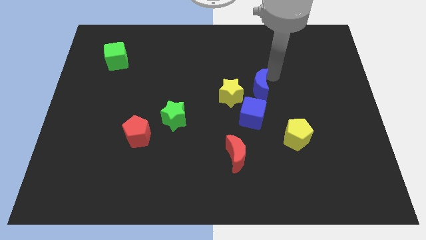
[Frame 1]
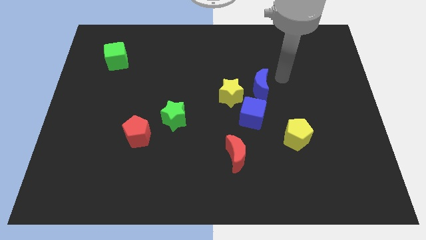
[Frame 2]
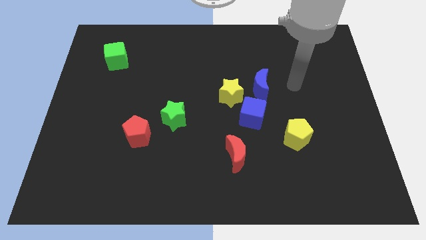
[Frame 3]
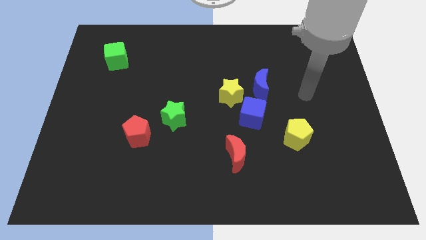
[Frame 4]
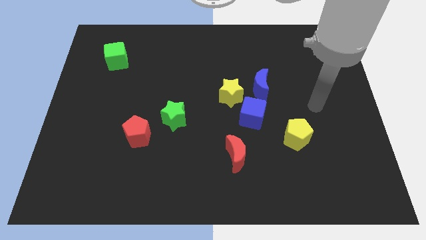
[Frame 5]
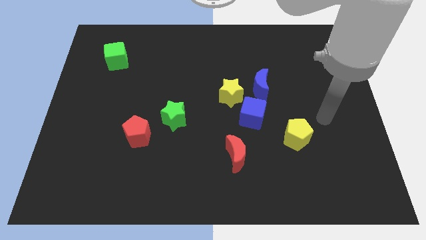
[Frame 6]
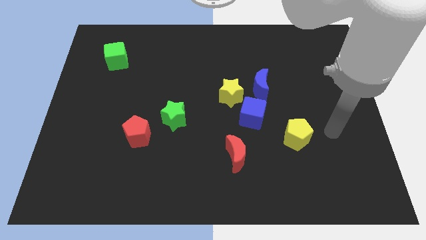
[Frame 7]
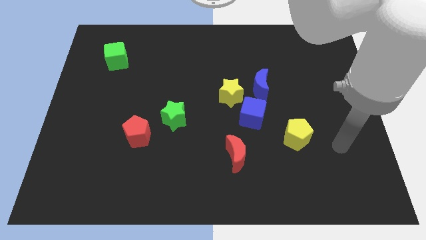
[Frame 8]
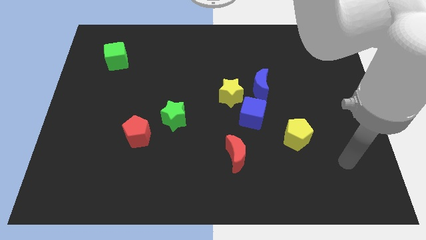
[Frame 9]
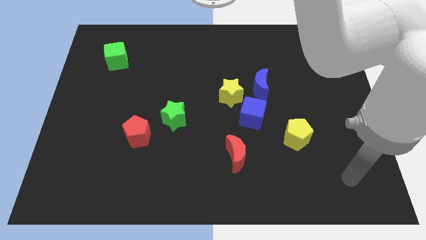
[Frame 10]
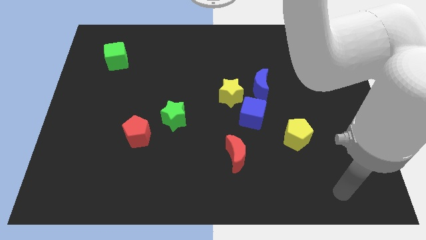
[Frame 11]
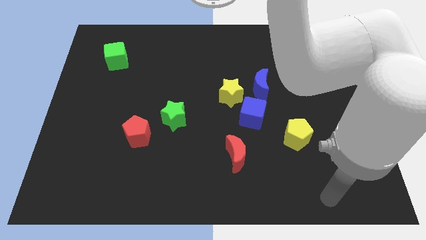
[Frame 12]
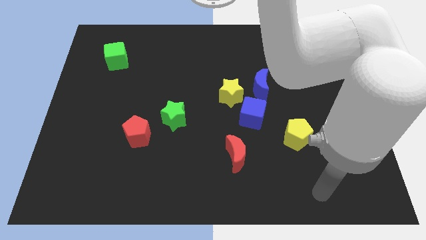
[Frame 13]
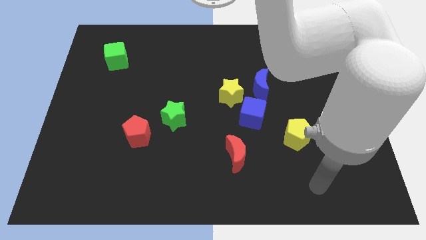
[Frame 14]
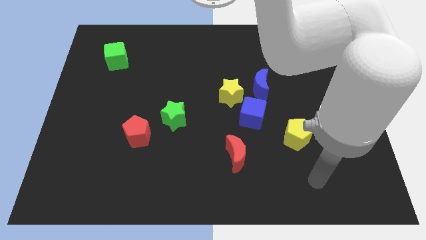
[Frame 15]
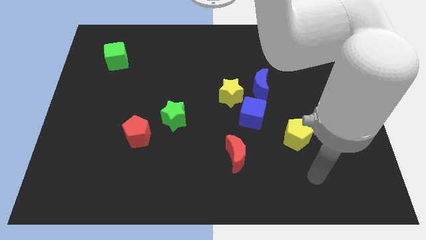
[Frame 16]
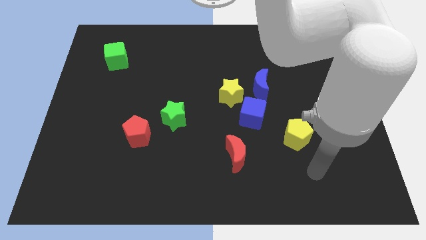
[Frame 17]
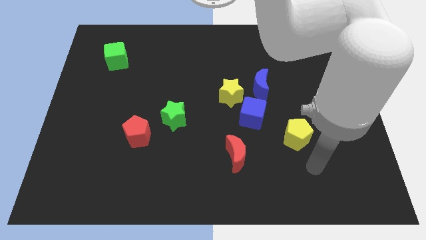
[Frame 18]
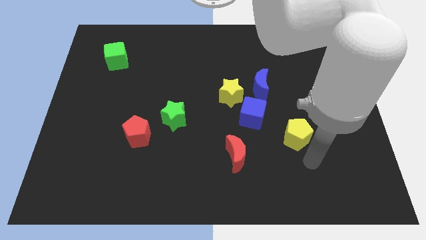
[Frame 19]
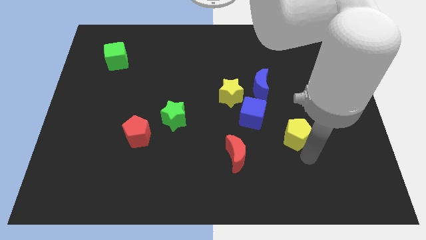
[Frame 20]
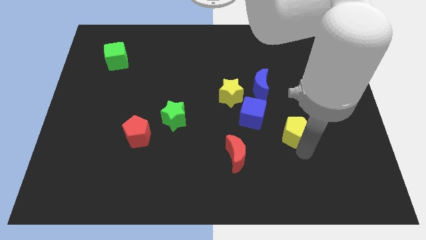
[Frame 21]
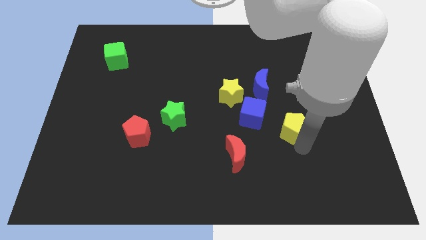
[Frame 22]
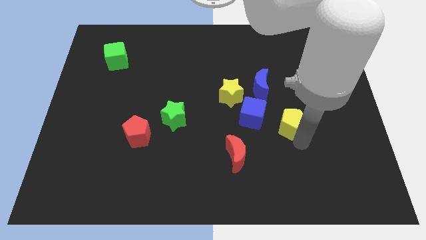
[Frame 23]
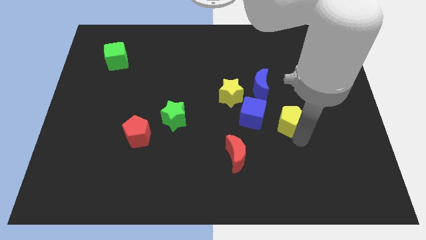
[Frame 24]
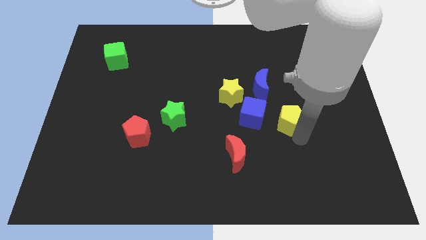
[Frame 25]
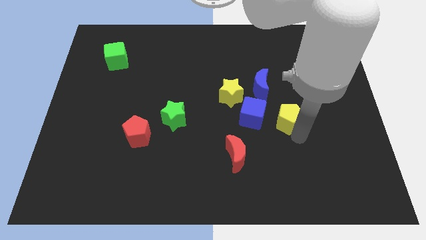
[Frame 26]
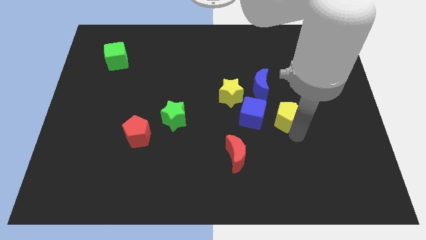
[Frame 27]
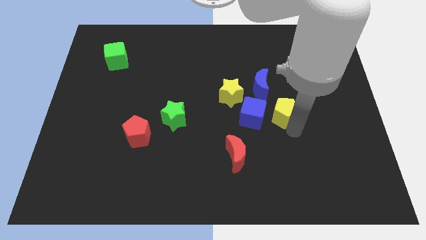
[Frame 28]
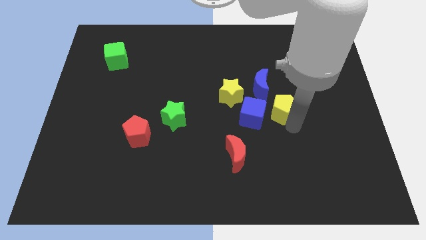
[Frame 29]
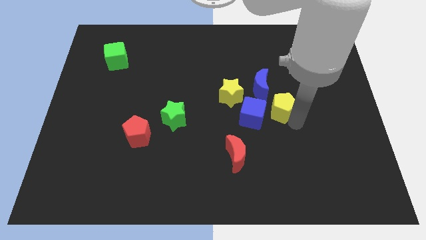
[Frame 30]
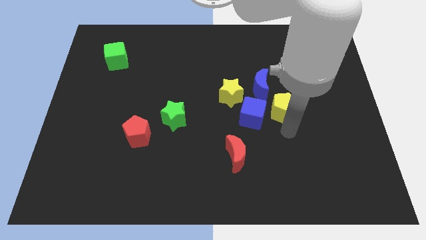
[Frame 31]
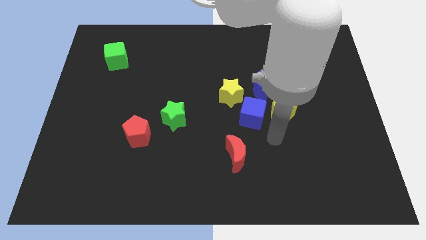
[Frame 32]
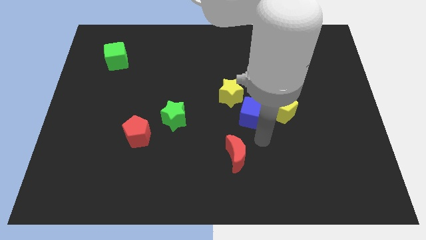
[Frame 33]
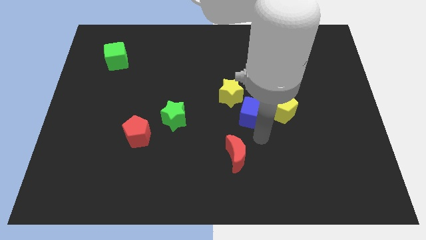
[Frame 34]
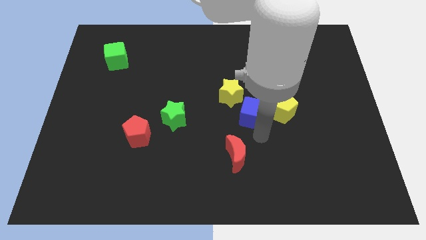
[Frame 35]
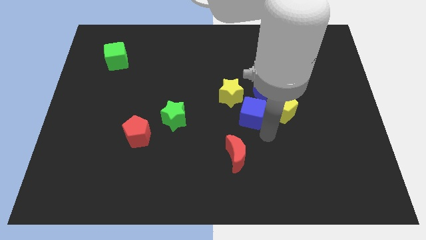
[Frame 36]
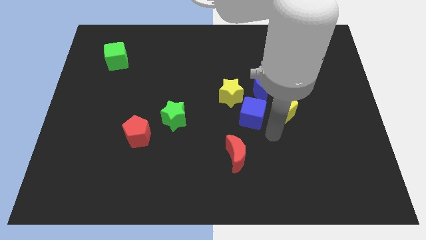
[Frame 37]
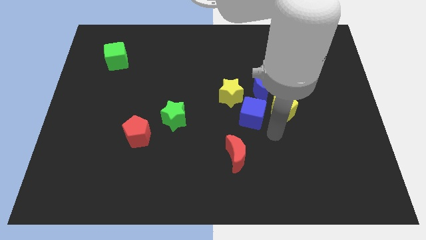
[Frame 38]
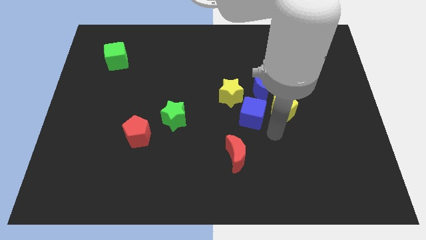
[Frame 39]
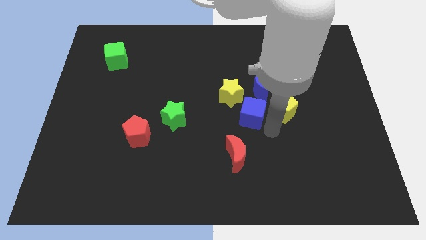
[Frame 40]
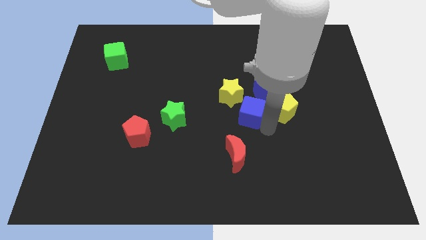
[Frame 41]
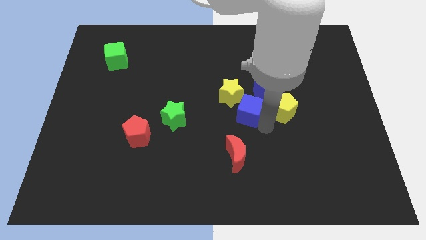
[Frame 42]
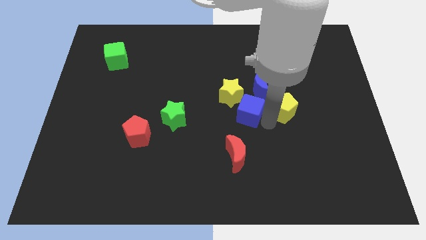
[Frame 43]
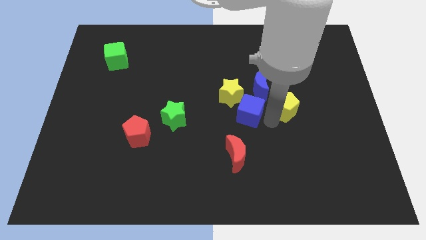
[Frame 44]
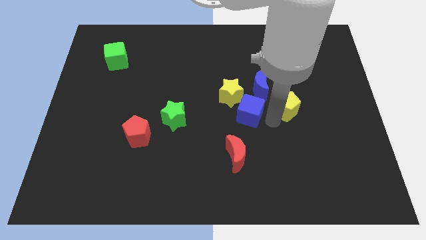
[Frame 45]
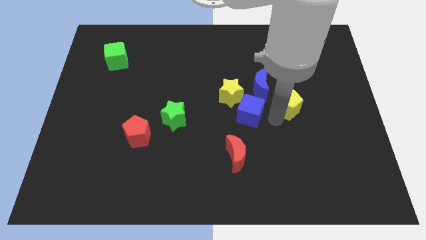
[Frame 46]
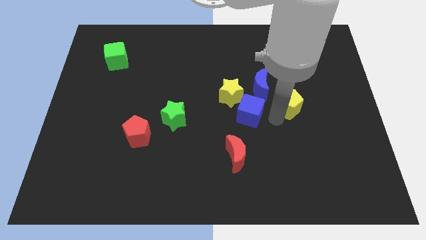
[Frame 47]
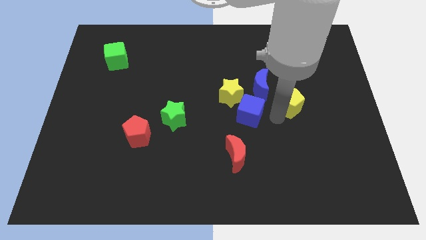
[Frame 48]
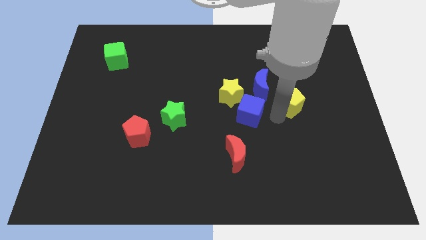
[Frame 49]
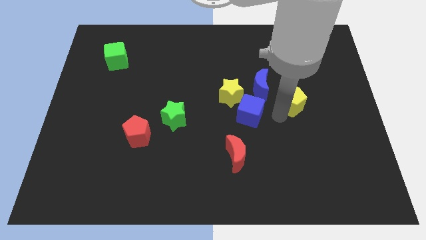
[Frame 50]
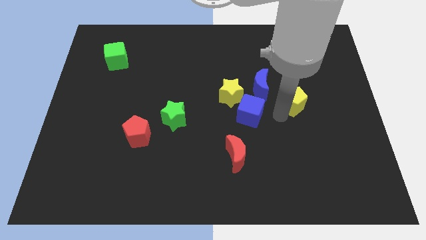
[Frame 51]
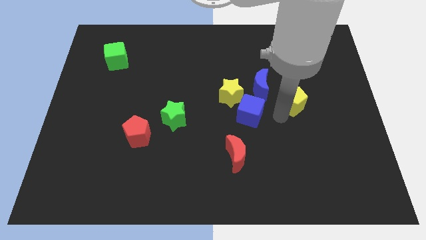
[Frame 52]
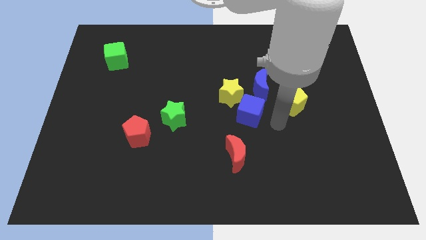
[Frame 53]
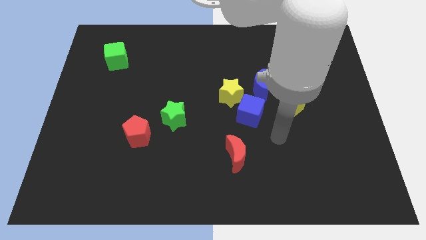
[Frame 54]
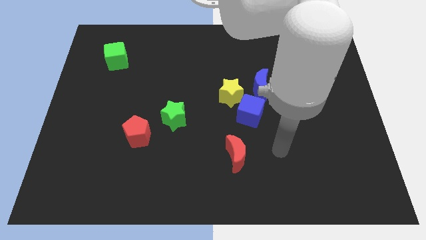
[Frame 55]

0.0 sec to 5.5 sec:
place the yellow pentagon right to the blue moon

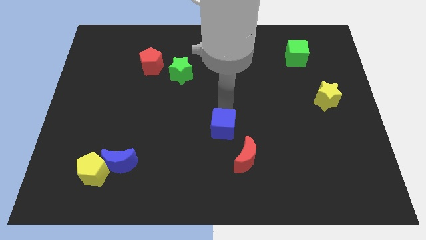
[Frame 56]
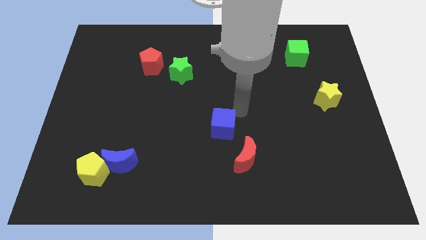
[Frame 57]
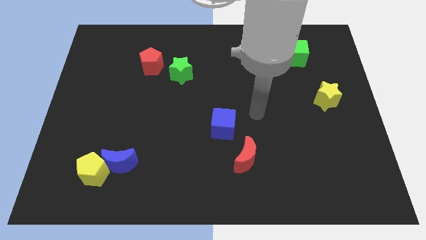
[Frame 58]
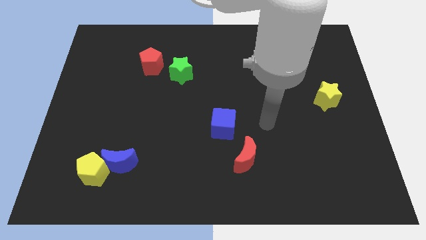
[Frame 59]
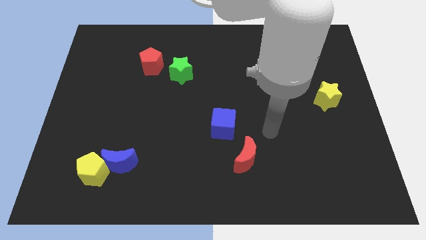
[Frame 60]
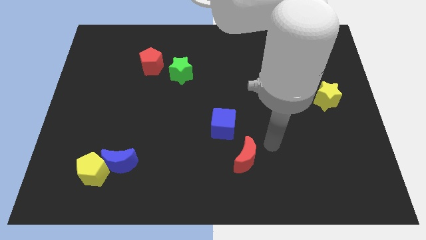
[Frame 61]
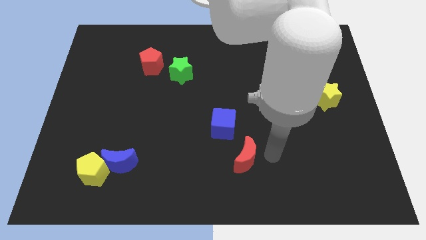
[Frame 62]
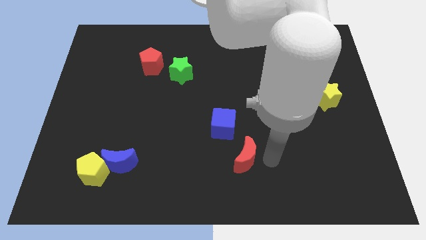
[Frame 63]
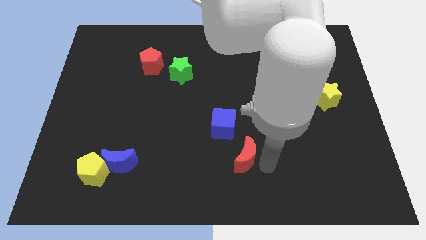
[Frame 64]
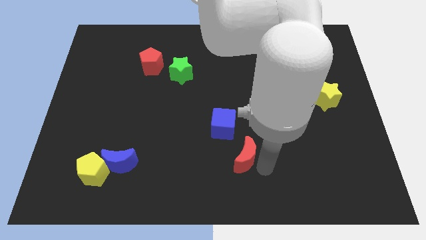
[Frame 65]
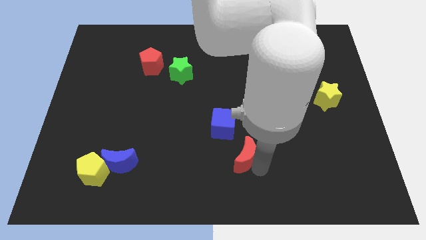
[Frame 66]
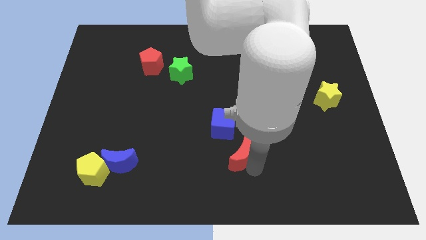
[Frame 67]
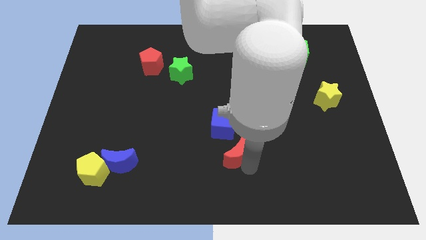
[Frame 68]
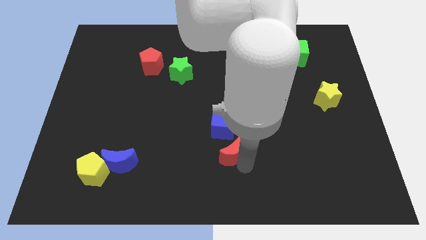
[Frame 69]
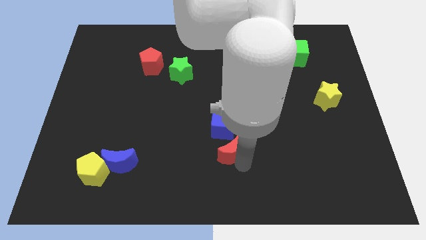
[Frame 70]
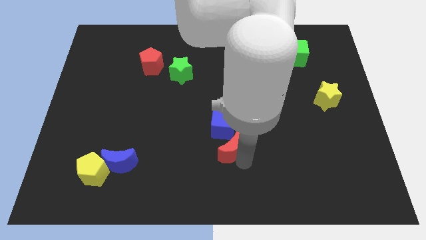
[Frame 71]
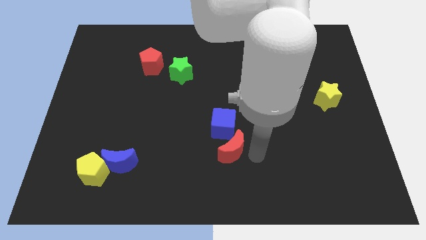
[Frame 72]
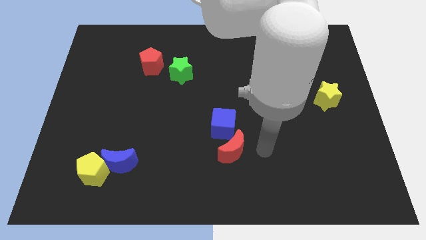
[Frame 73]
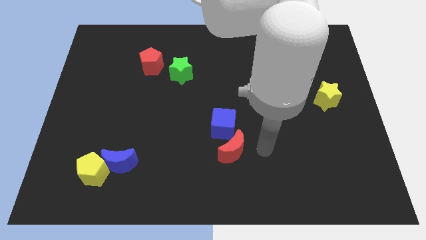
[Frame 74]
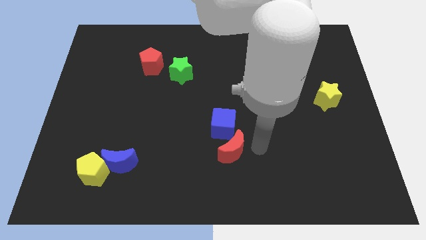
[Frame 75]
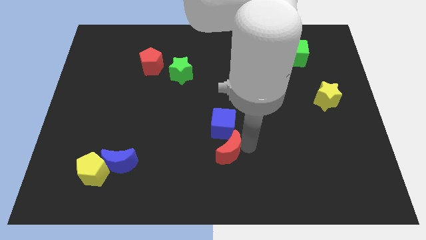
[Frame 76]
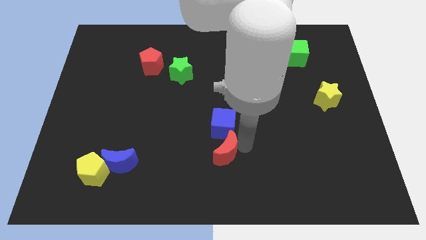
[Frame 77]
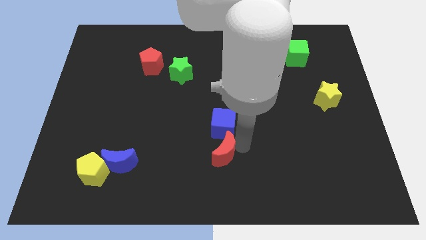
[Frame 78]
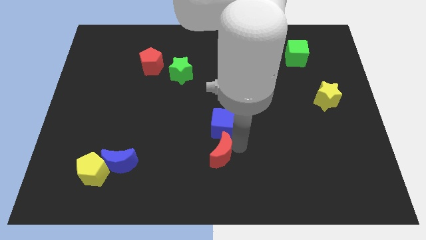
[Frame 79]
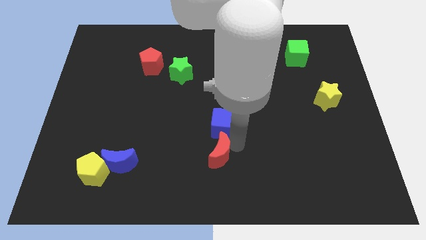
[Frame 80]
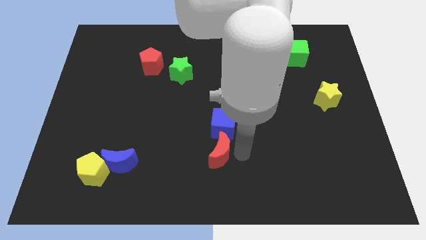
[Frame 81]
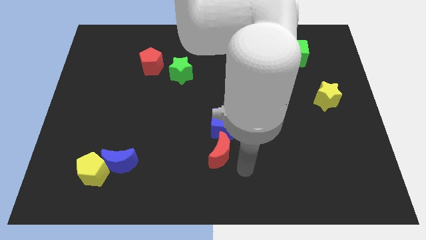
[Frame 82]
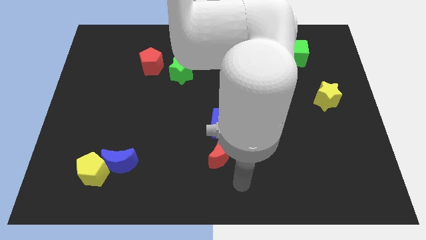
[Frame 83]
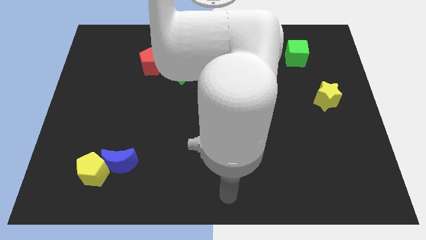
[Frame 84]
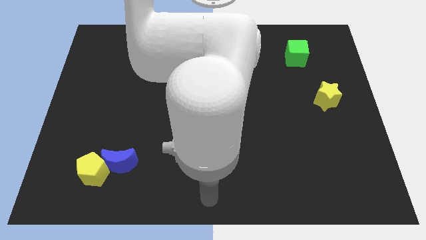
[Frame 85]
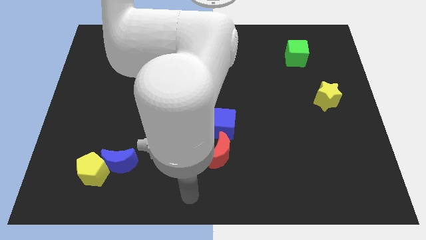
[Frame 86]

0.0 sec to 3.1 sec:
place the red moon at the bottom of blue cube

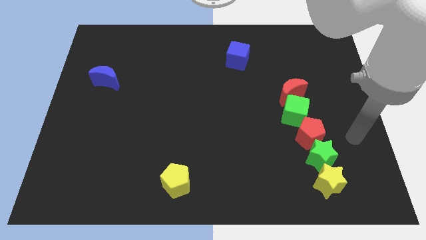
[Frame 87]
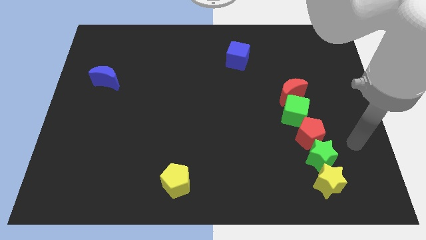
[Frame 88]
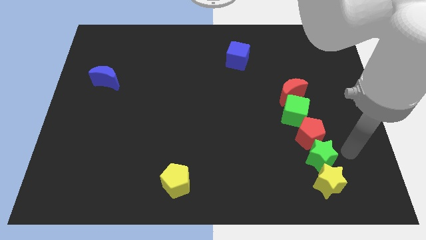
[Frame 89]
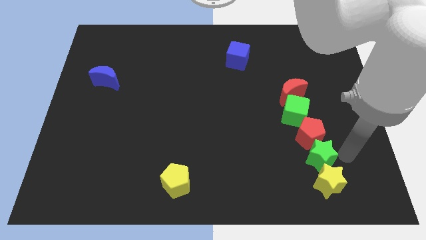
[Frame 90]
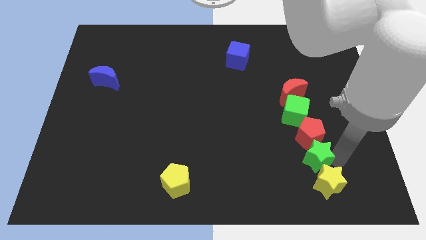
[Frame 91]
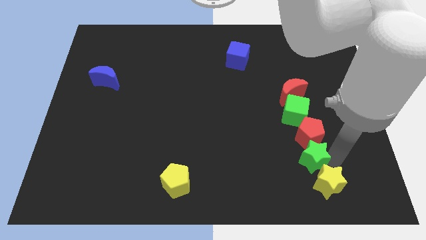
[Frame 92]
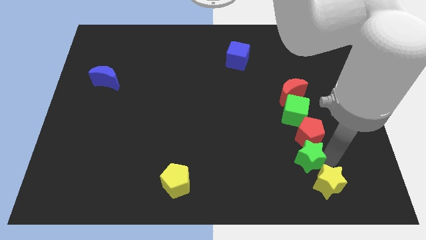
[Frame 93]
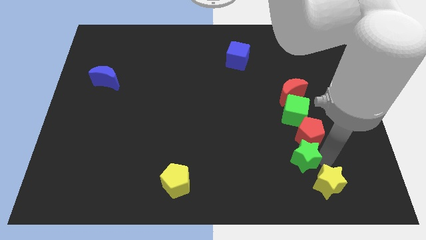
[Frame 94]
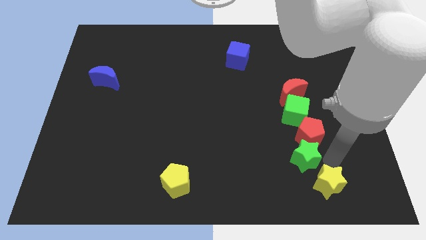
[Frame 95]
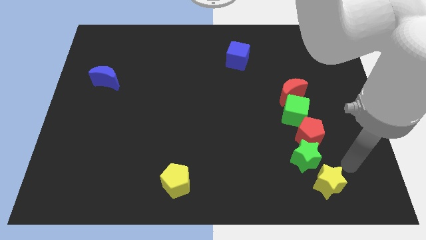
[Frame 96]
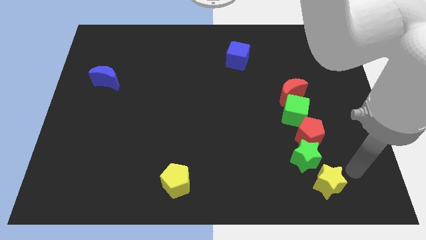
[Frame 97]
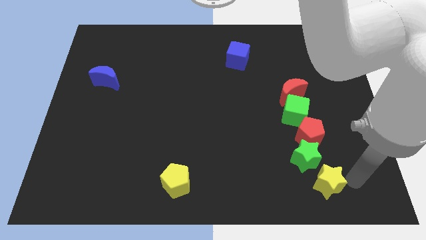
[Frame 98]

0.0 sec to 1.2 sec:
apart green star from yellow star
